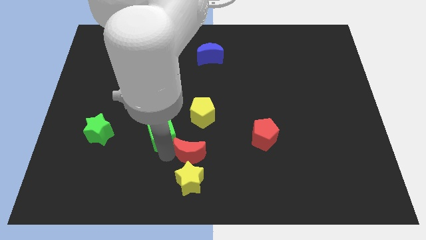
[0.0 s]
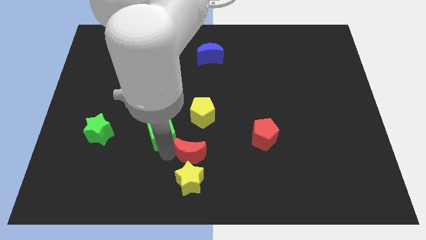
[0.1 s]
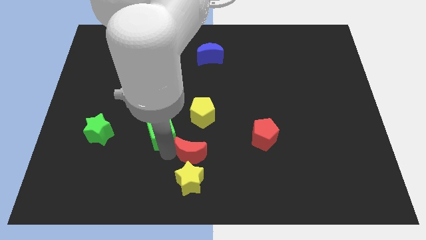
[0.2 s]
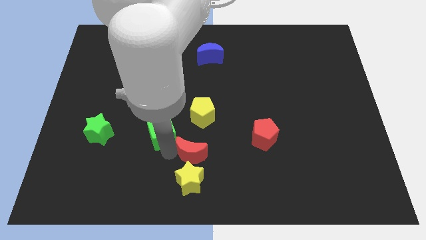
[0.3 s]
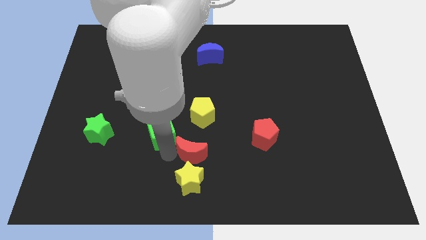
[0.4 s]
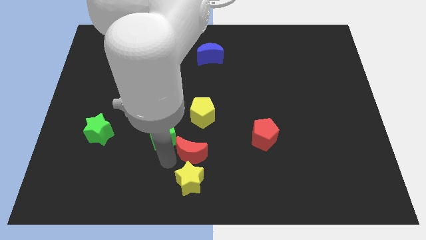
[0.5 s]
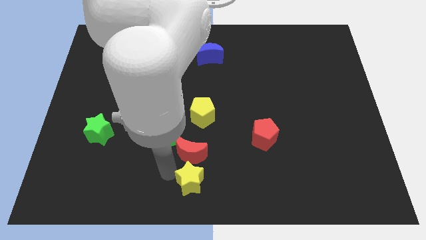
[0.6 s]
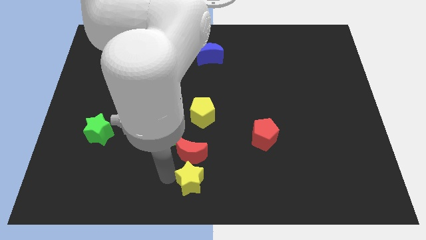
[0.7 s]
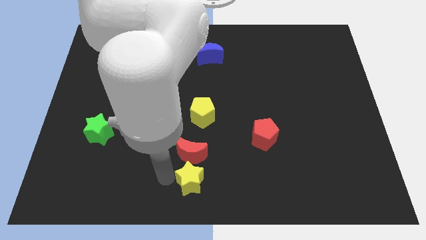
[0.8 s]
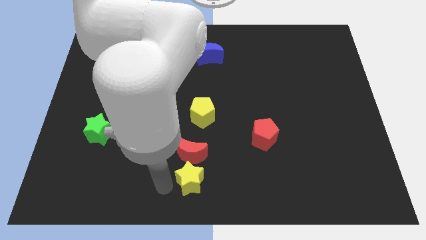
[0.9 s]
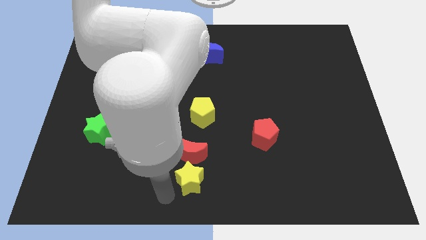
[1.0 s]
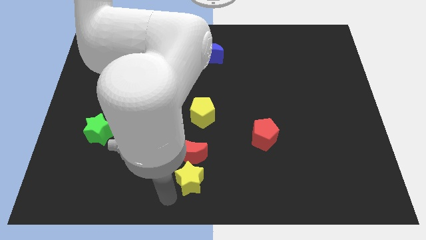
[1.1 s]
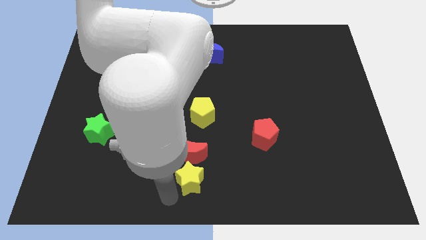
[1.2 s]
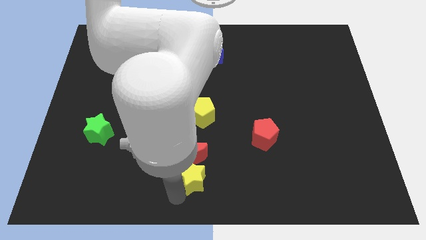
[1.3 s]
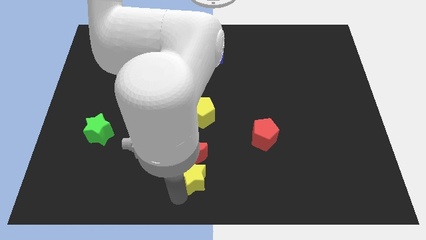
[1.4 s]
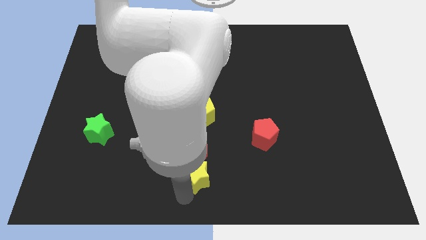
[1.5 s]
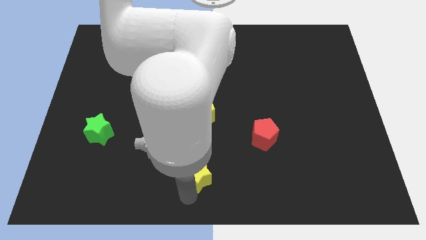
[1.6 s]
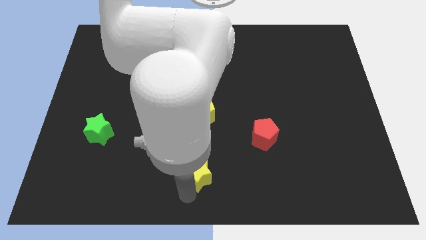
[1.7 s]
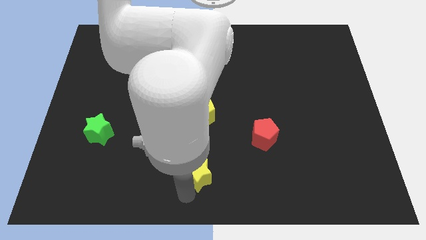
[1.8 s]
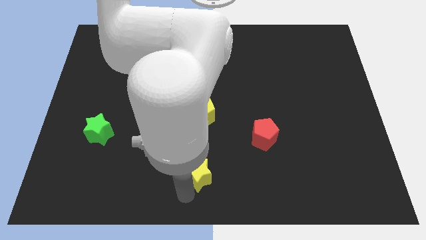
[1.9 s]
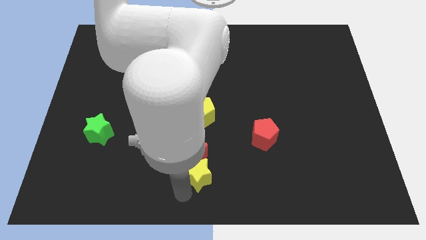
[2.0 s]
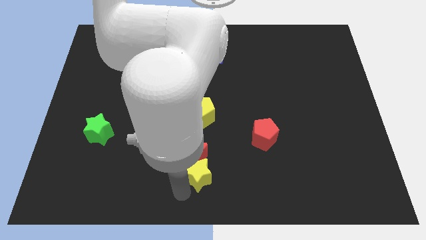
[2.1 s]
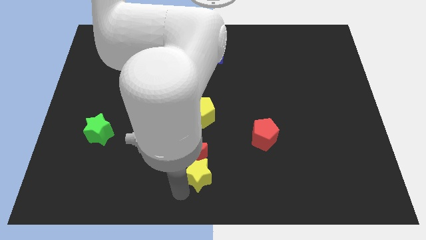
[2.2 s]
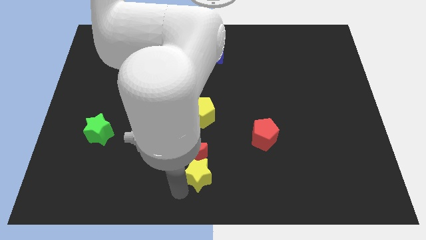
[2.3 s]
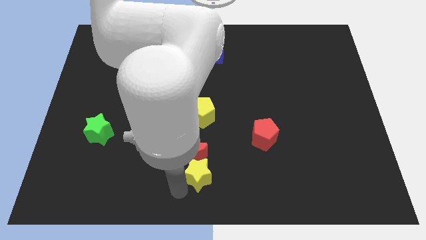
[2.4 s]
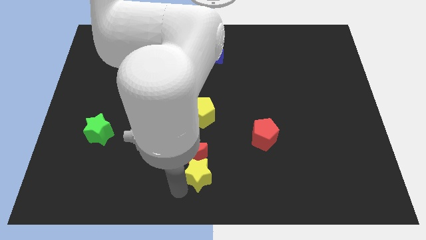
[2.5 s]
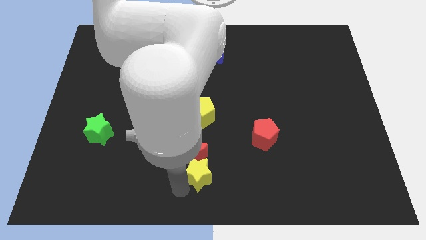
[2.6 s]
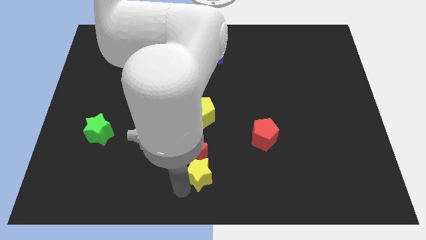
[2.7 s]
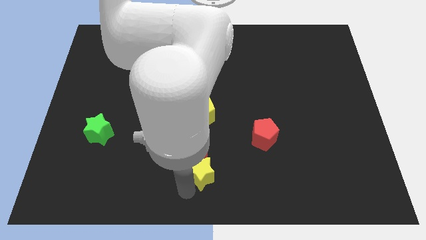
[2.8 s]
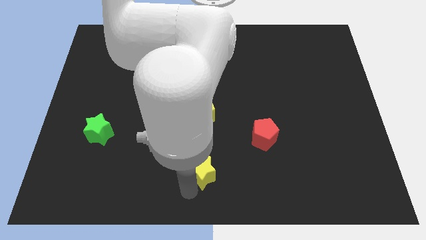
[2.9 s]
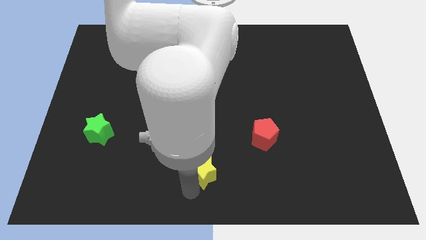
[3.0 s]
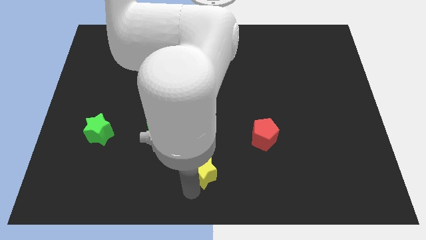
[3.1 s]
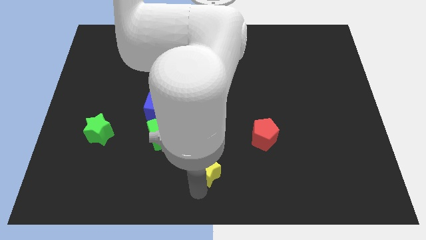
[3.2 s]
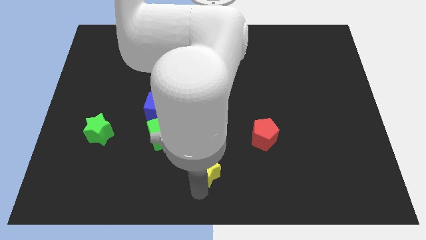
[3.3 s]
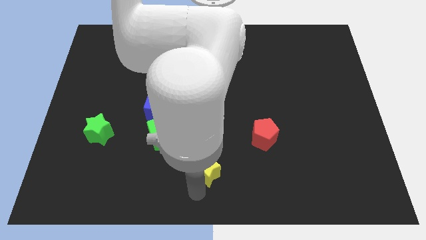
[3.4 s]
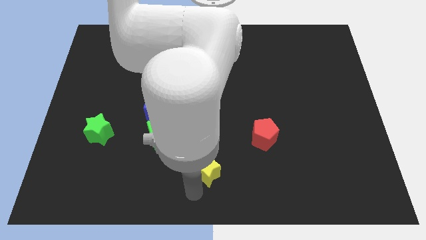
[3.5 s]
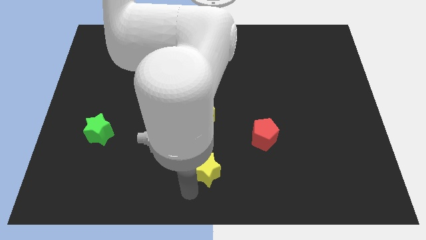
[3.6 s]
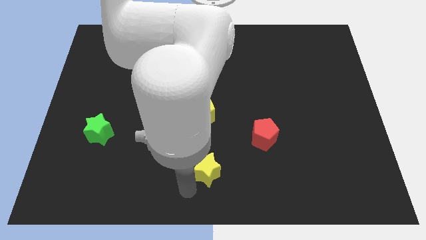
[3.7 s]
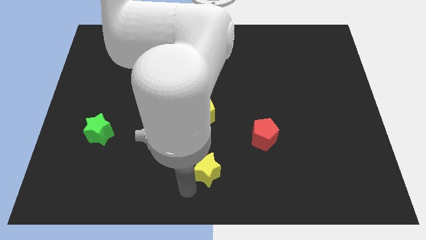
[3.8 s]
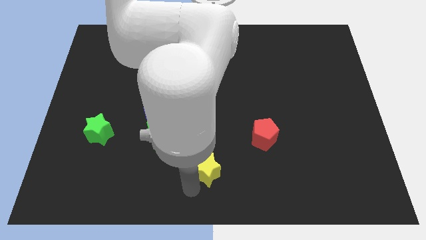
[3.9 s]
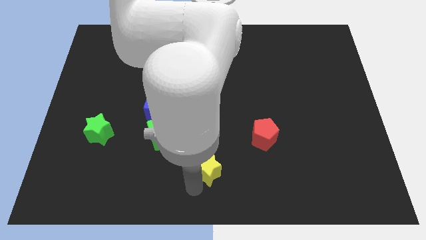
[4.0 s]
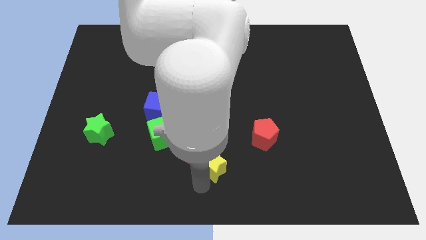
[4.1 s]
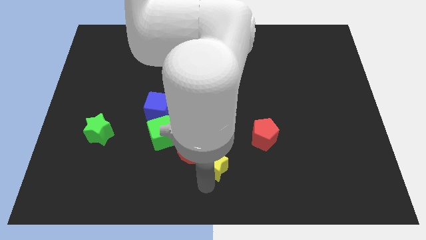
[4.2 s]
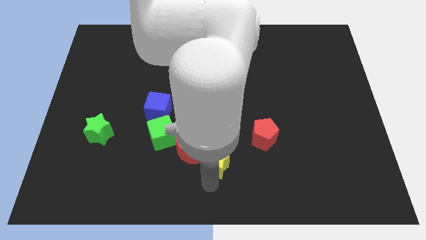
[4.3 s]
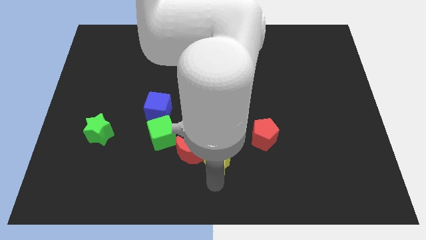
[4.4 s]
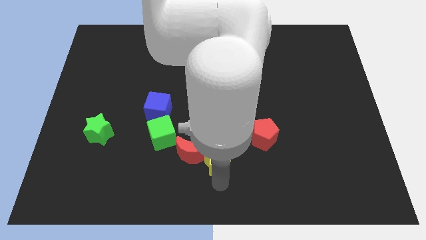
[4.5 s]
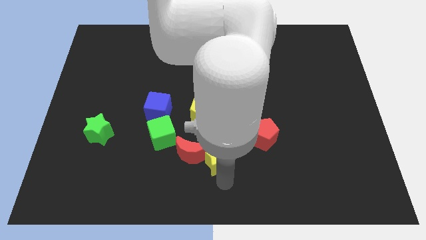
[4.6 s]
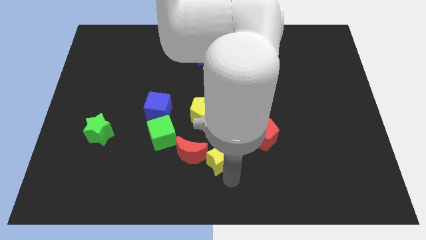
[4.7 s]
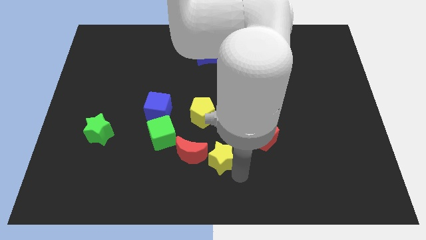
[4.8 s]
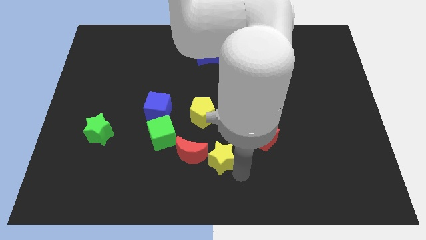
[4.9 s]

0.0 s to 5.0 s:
slide the yellow star parallel right to the red moon

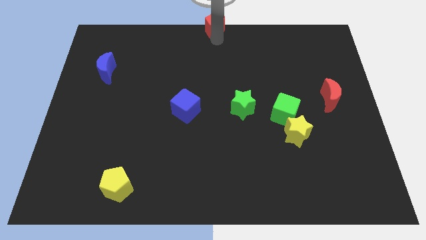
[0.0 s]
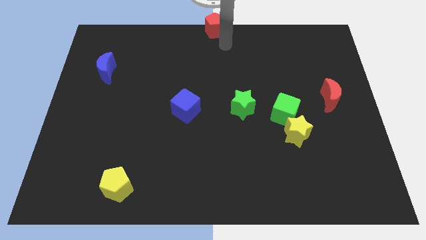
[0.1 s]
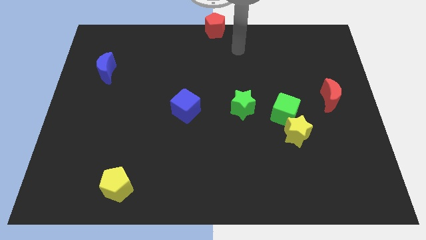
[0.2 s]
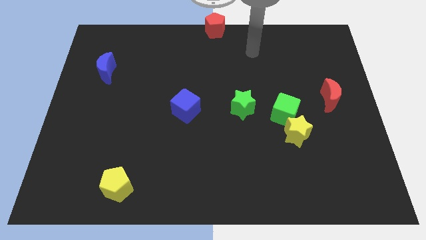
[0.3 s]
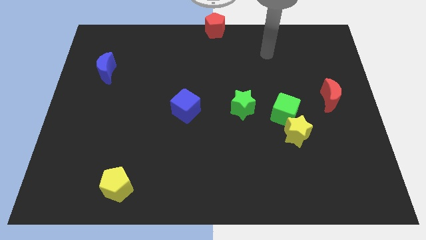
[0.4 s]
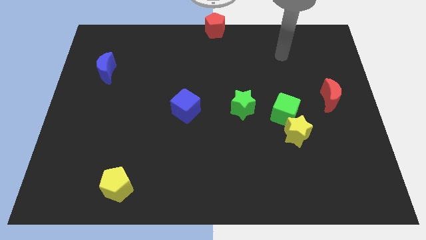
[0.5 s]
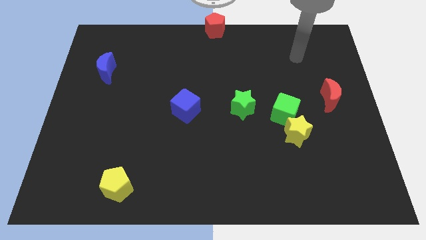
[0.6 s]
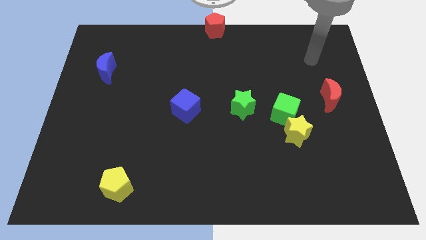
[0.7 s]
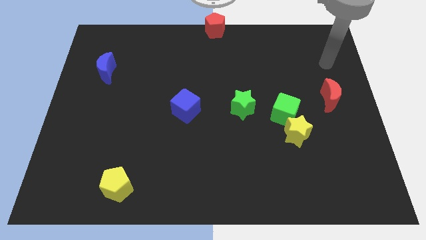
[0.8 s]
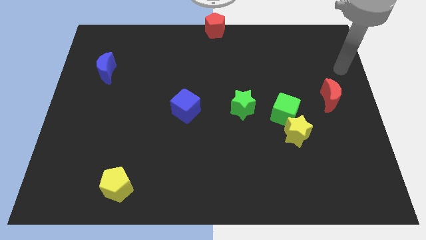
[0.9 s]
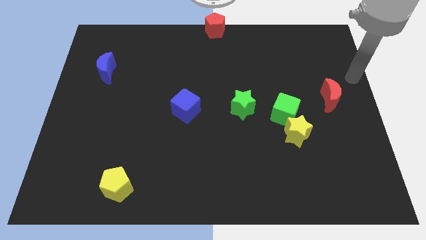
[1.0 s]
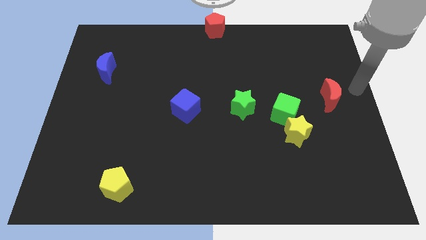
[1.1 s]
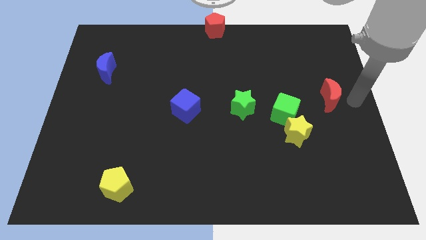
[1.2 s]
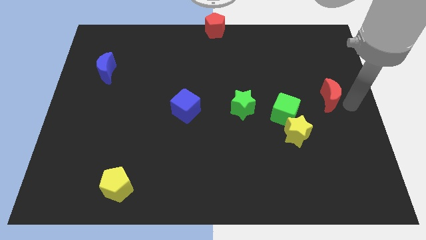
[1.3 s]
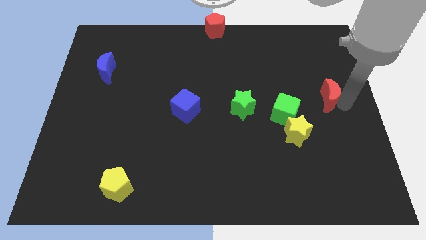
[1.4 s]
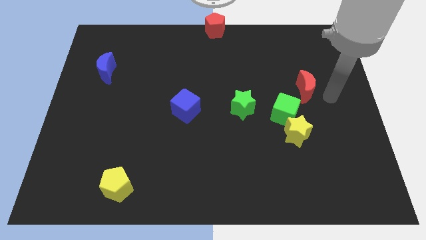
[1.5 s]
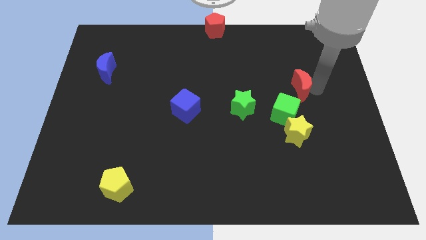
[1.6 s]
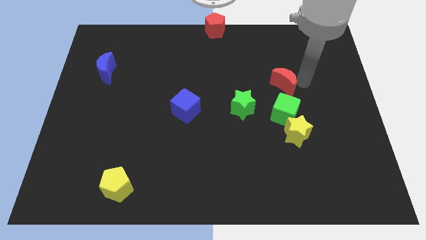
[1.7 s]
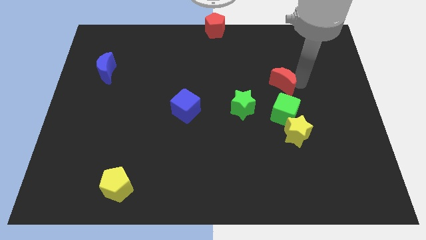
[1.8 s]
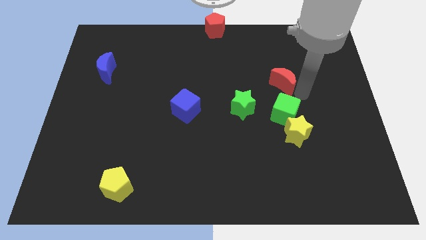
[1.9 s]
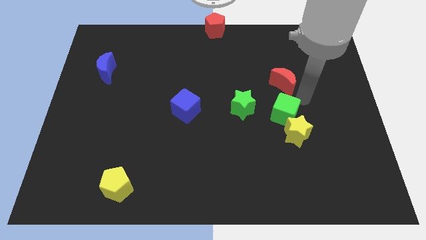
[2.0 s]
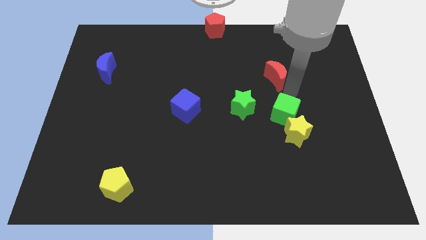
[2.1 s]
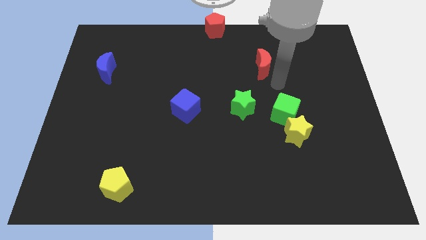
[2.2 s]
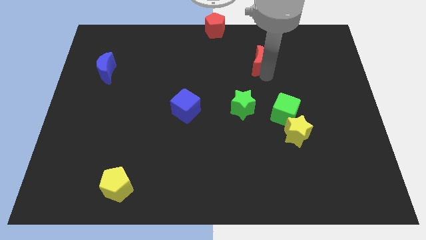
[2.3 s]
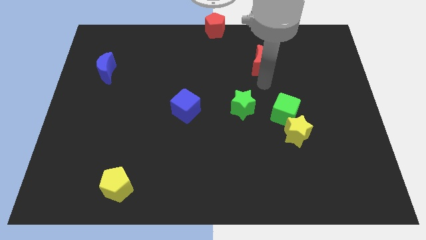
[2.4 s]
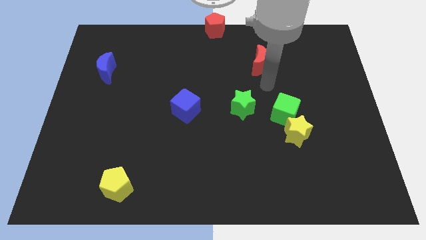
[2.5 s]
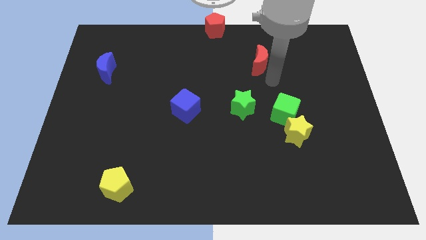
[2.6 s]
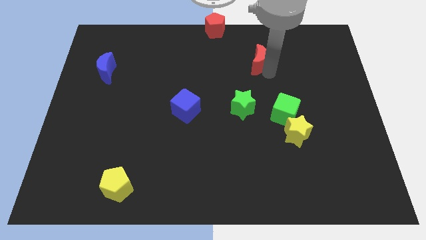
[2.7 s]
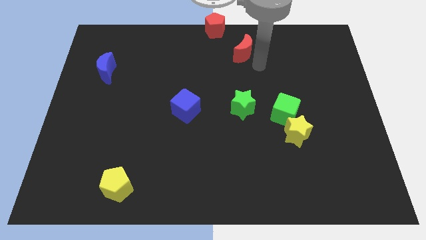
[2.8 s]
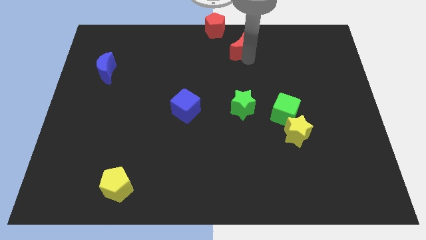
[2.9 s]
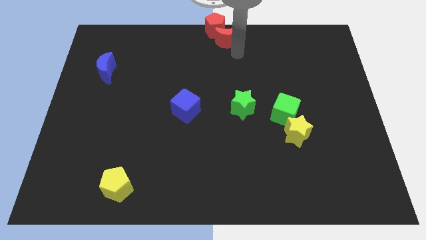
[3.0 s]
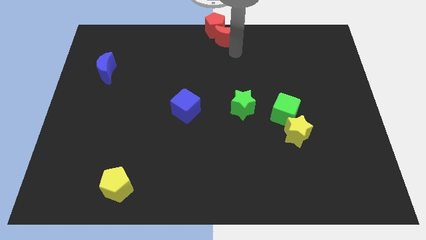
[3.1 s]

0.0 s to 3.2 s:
push the red moon towards the red pentagon

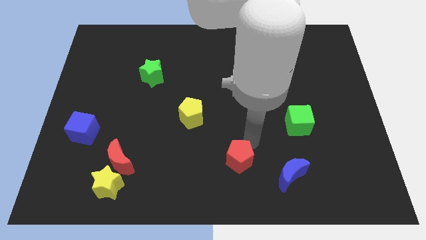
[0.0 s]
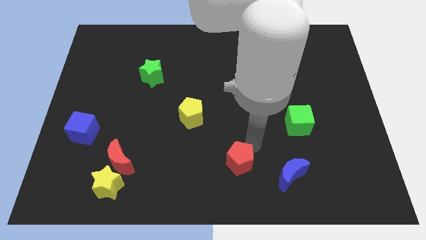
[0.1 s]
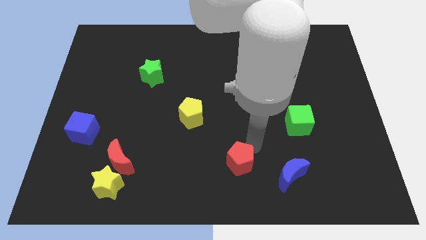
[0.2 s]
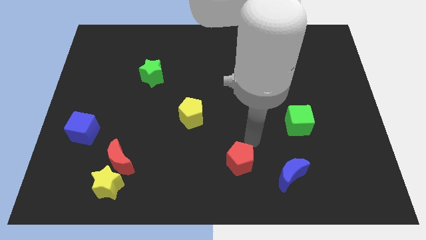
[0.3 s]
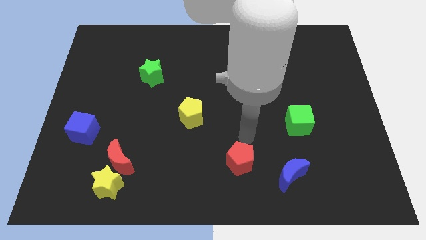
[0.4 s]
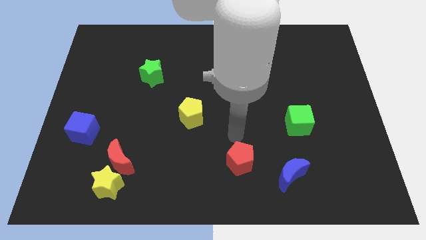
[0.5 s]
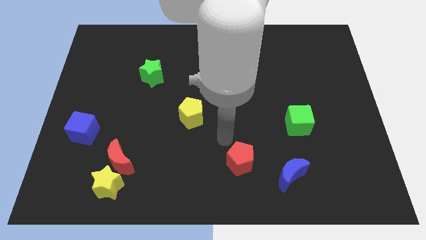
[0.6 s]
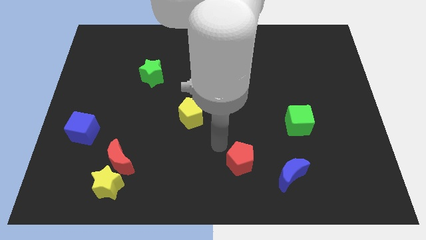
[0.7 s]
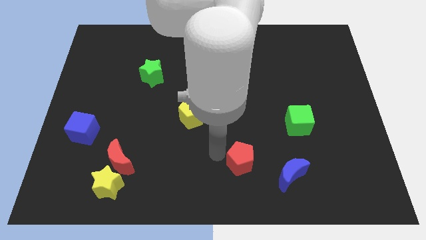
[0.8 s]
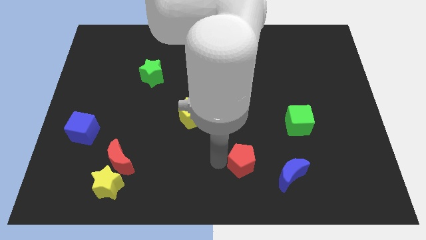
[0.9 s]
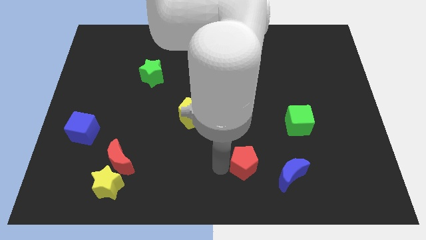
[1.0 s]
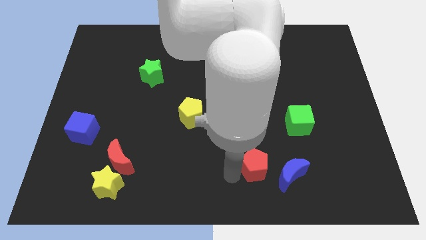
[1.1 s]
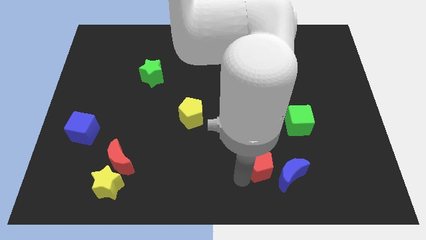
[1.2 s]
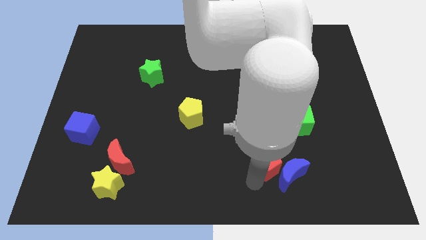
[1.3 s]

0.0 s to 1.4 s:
move the red pentagon close to blue crescent
